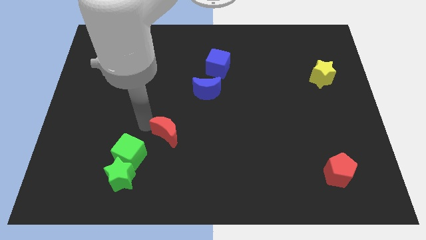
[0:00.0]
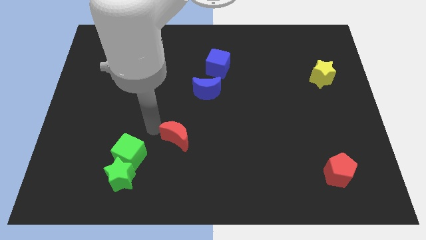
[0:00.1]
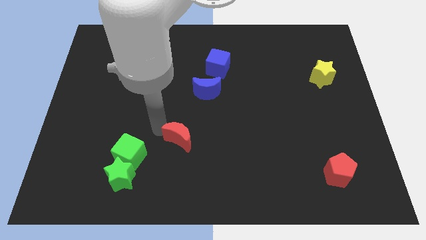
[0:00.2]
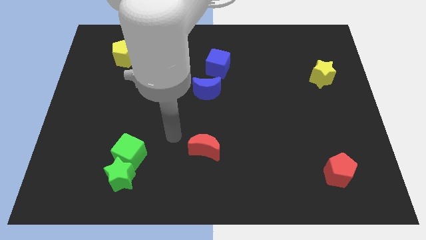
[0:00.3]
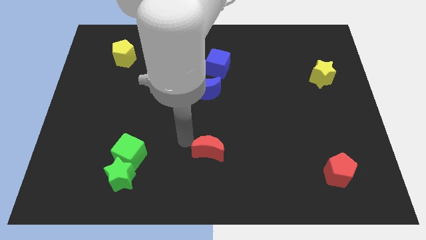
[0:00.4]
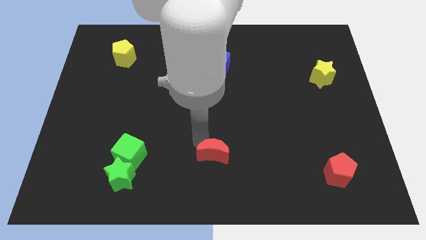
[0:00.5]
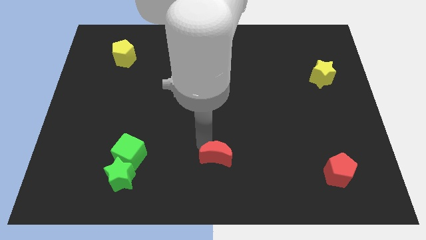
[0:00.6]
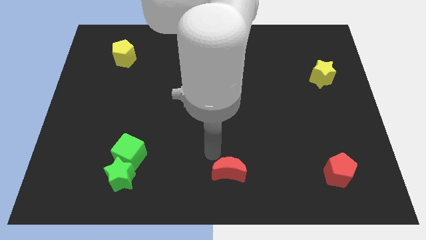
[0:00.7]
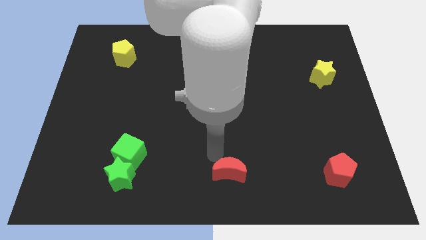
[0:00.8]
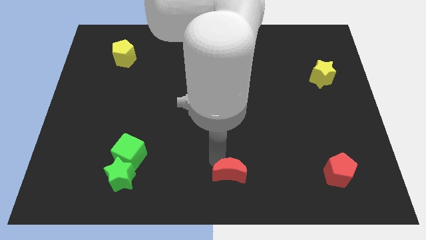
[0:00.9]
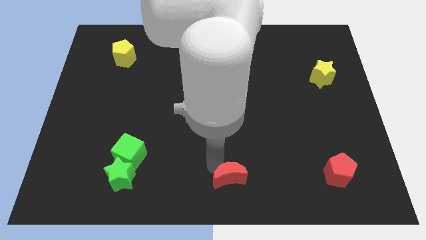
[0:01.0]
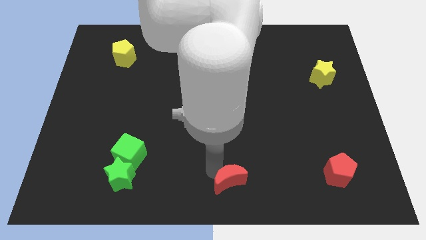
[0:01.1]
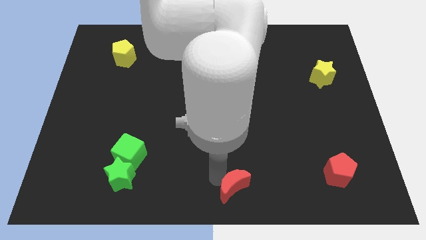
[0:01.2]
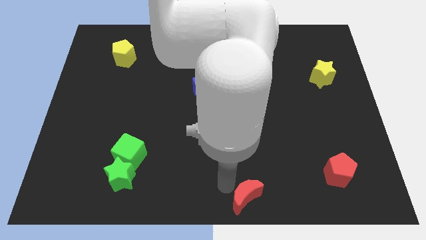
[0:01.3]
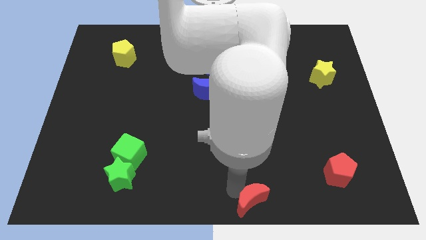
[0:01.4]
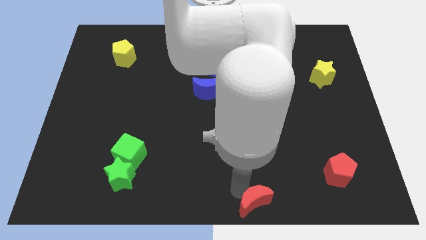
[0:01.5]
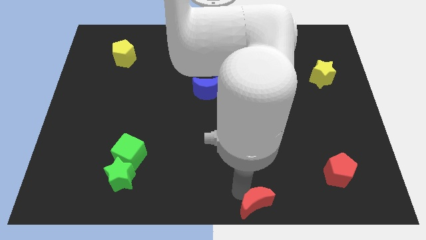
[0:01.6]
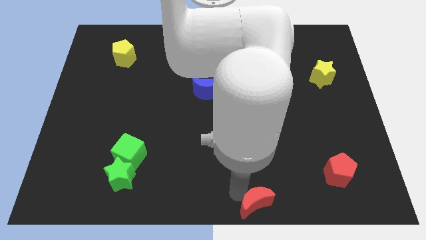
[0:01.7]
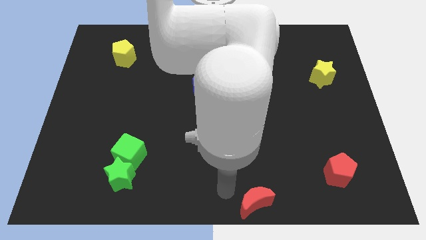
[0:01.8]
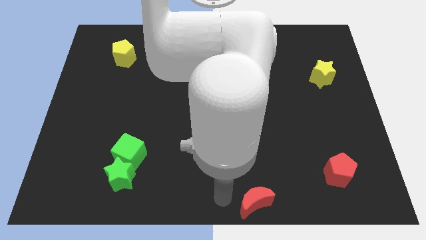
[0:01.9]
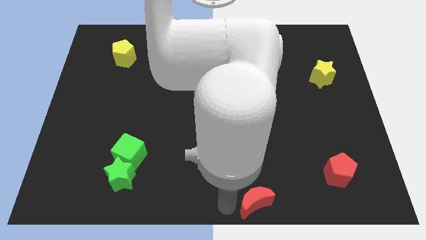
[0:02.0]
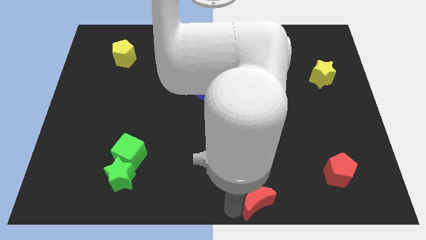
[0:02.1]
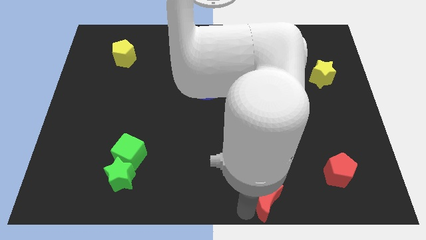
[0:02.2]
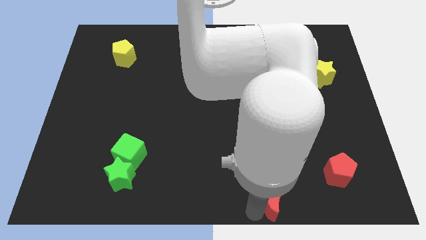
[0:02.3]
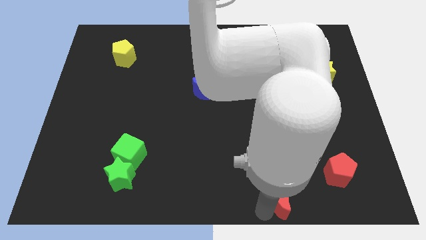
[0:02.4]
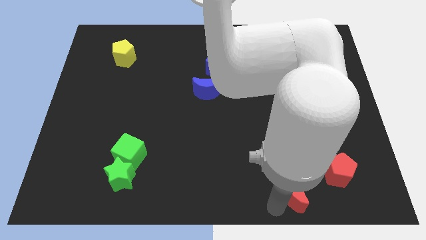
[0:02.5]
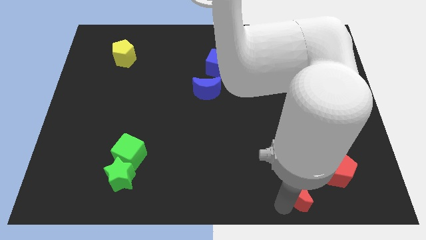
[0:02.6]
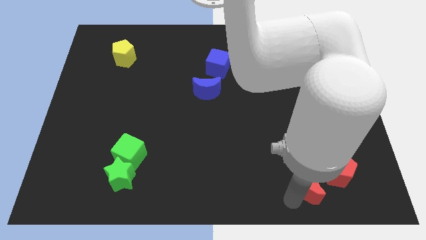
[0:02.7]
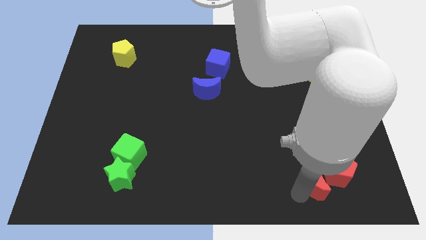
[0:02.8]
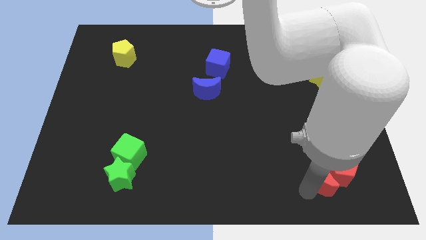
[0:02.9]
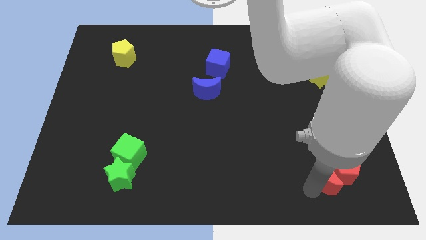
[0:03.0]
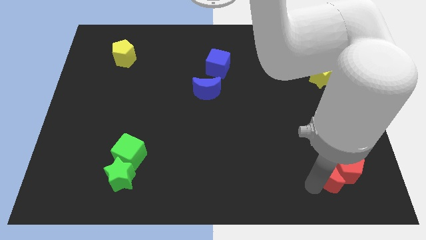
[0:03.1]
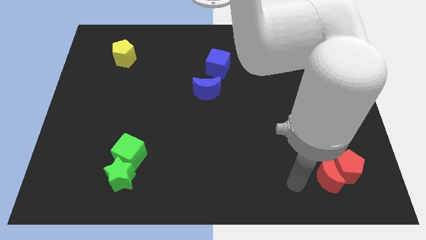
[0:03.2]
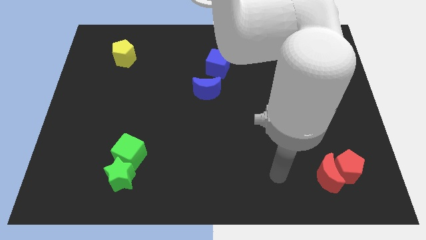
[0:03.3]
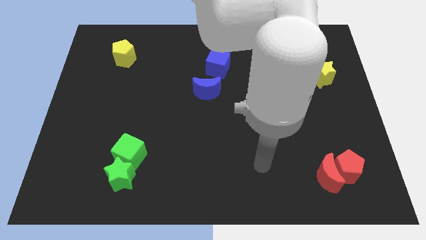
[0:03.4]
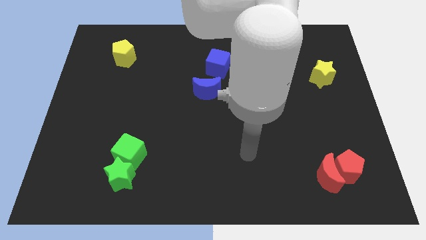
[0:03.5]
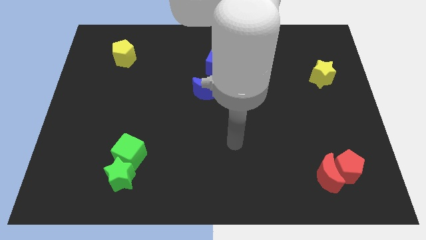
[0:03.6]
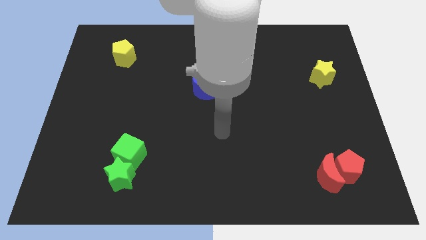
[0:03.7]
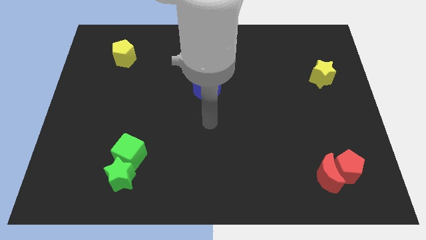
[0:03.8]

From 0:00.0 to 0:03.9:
push red moon into the red pentagon

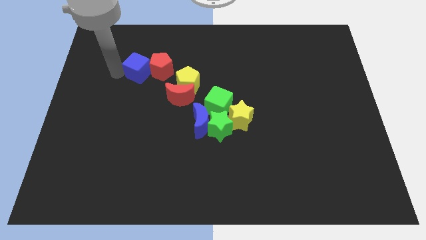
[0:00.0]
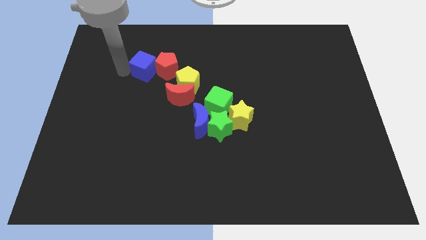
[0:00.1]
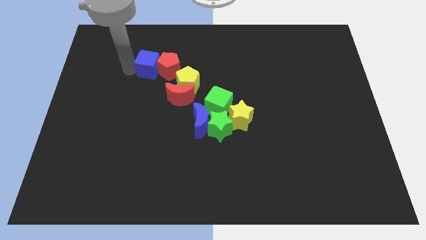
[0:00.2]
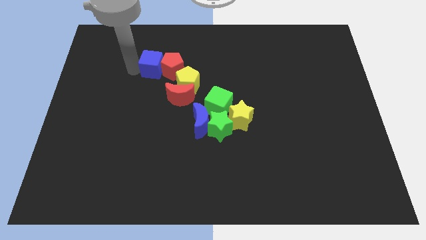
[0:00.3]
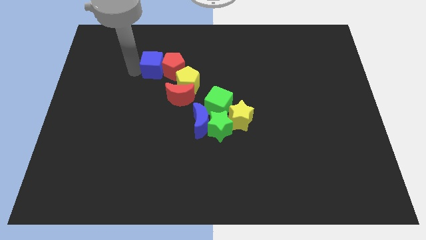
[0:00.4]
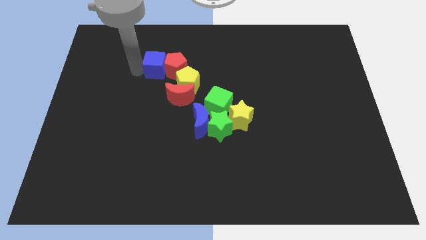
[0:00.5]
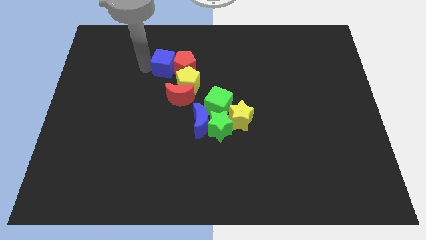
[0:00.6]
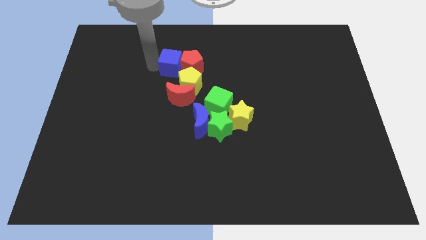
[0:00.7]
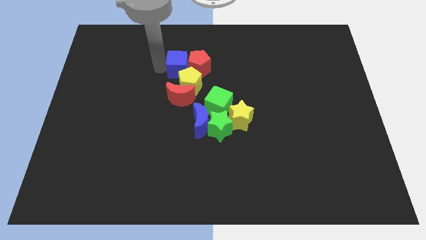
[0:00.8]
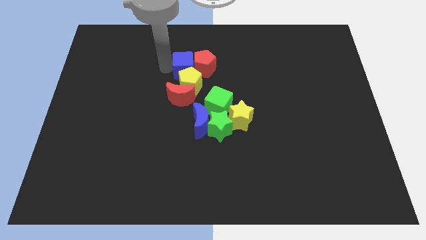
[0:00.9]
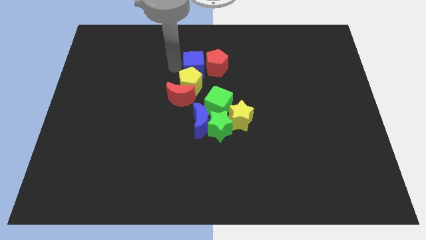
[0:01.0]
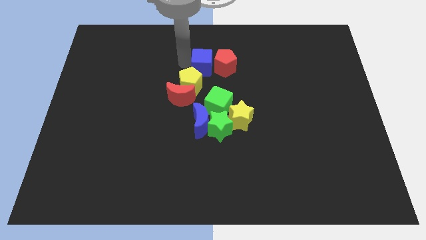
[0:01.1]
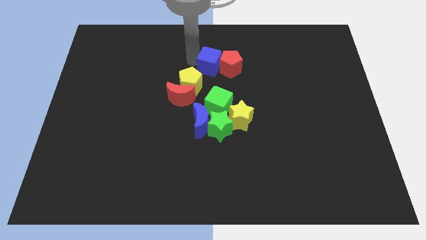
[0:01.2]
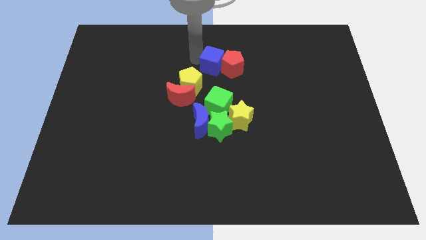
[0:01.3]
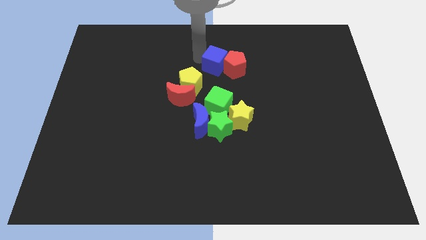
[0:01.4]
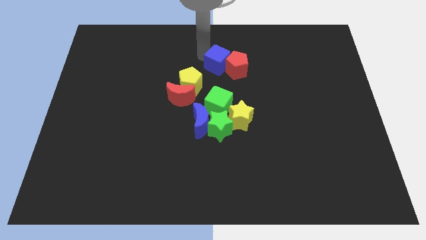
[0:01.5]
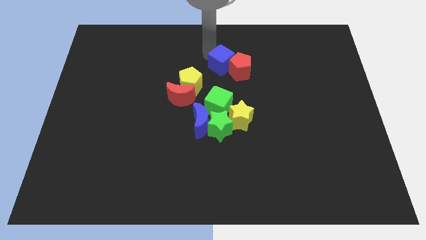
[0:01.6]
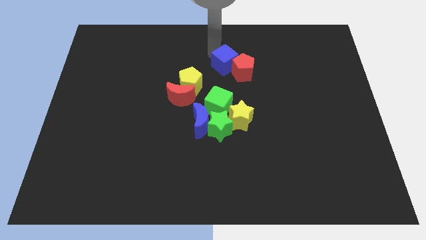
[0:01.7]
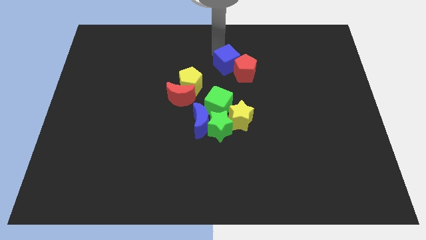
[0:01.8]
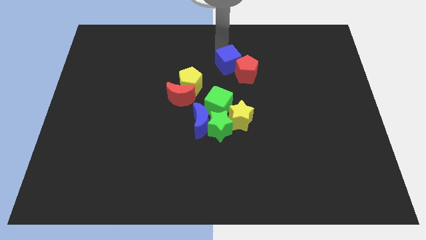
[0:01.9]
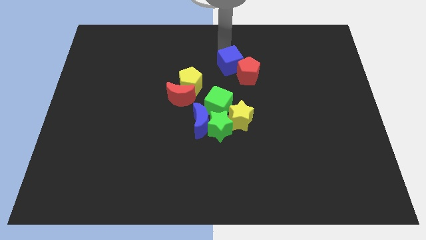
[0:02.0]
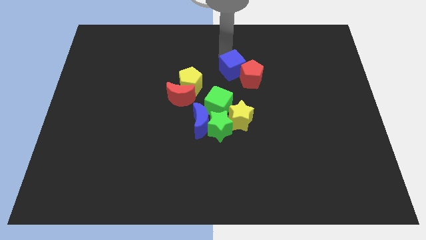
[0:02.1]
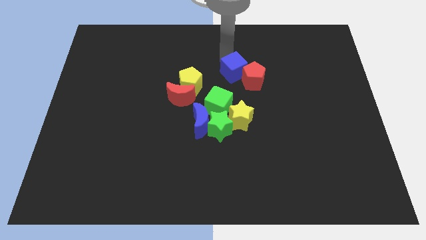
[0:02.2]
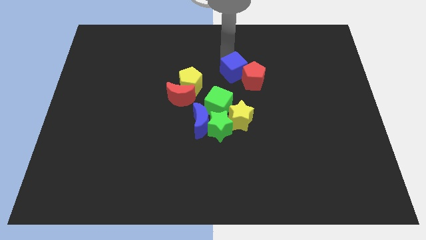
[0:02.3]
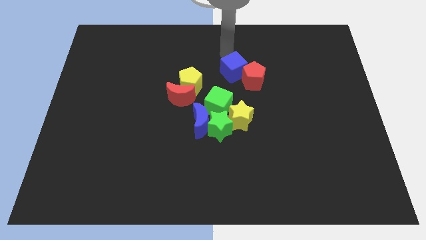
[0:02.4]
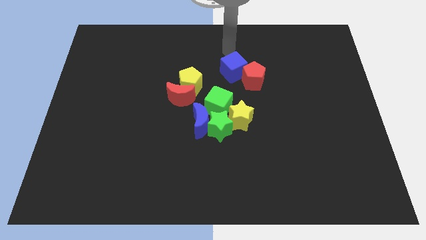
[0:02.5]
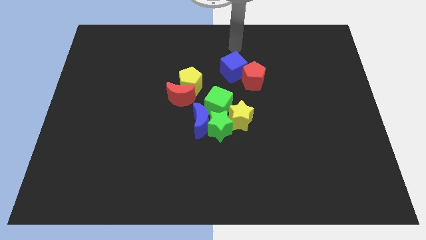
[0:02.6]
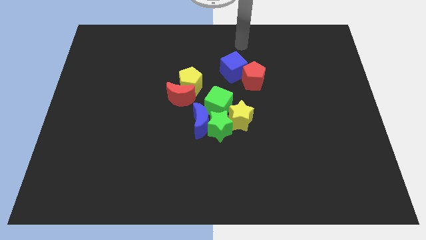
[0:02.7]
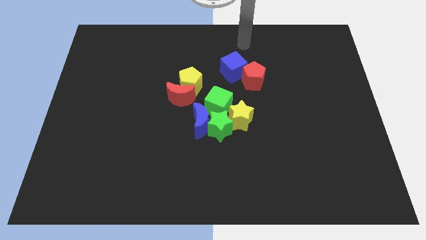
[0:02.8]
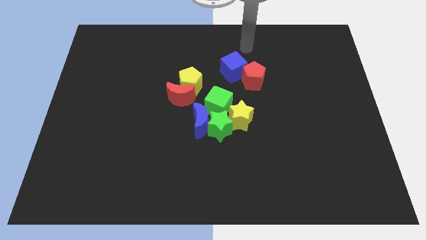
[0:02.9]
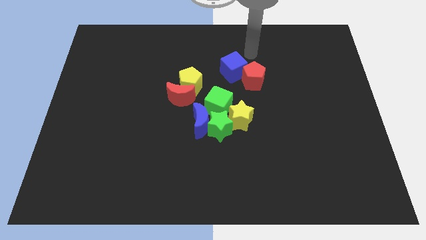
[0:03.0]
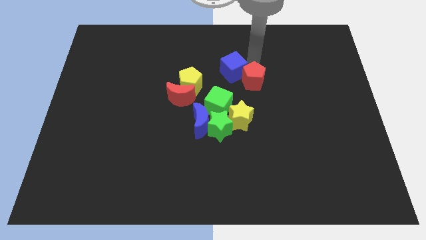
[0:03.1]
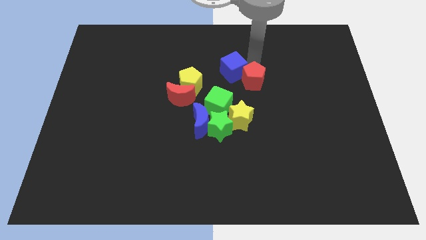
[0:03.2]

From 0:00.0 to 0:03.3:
push the blue cube and red pentagon towards the group of blocks

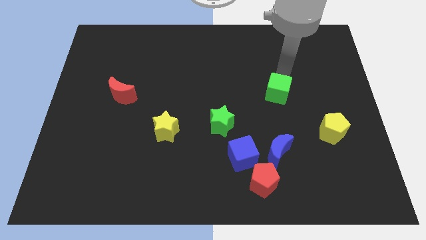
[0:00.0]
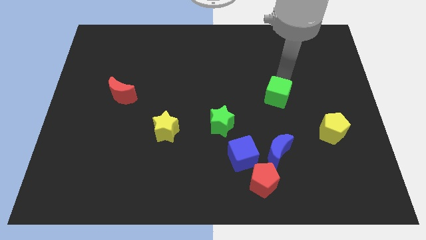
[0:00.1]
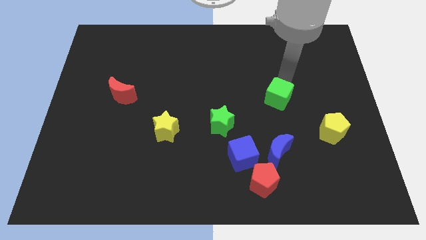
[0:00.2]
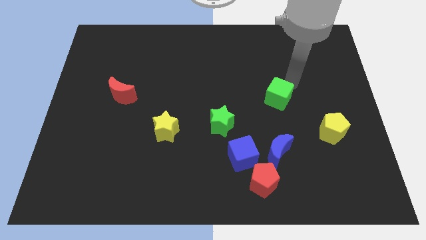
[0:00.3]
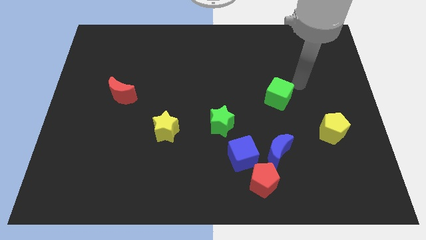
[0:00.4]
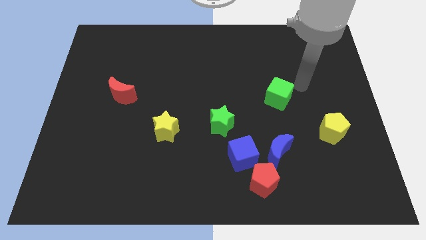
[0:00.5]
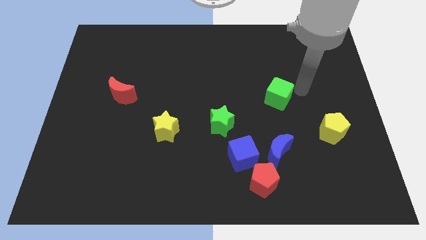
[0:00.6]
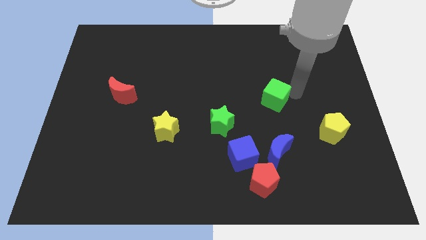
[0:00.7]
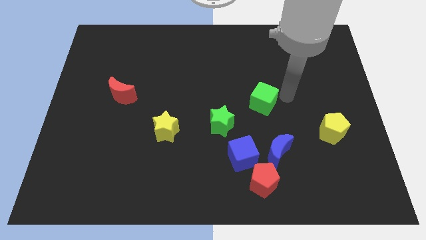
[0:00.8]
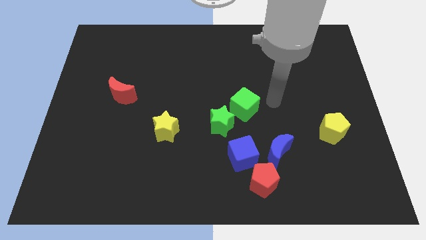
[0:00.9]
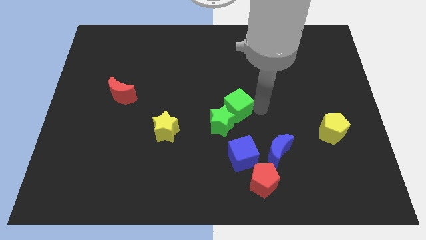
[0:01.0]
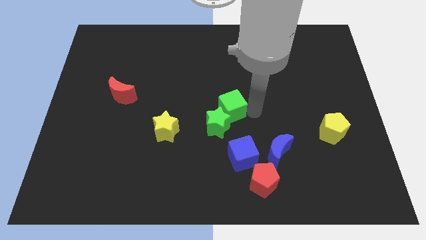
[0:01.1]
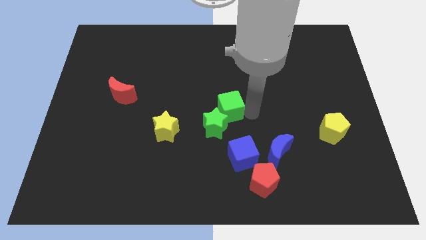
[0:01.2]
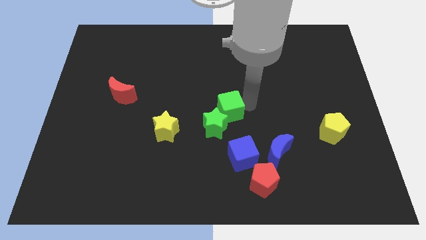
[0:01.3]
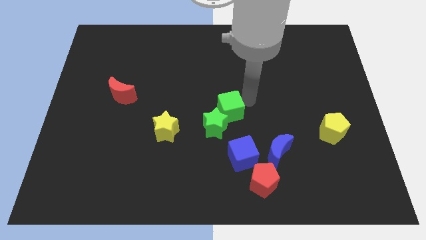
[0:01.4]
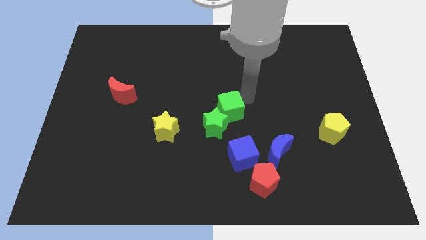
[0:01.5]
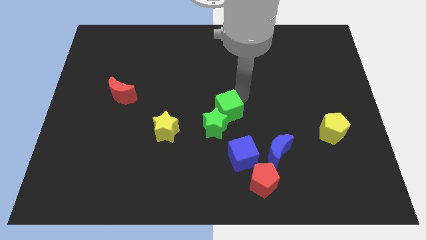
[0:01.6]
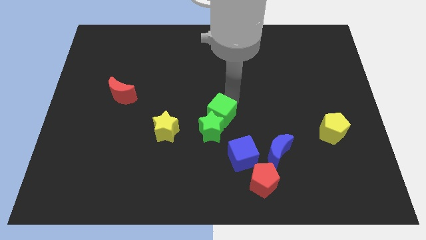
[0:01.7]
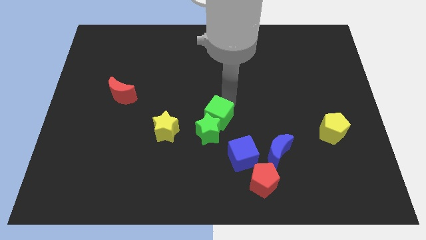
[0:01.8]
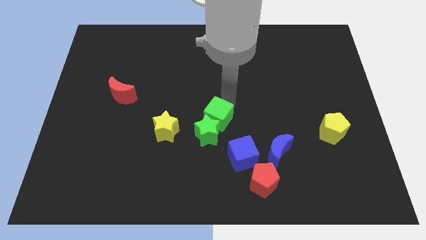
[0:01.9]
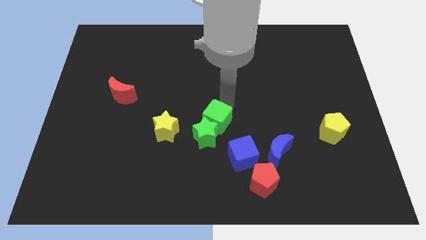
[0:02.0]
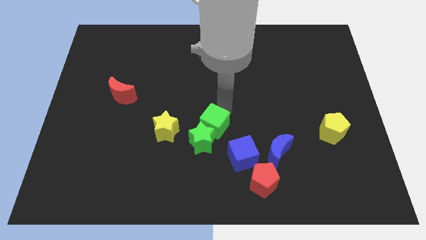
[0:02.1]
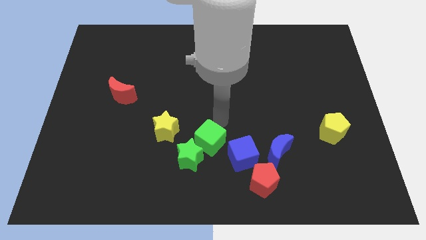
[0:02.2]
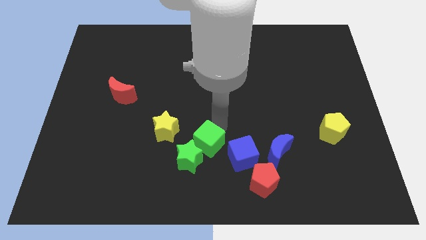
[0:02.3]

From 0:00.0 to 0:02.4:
place green cube in between yellow star and blue cube
